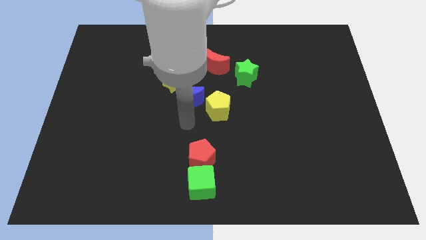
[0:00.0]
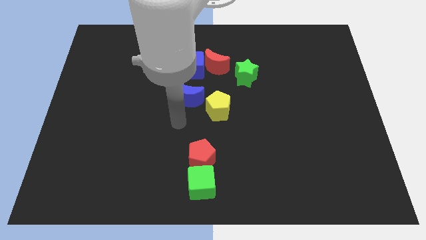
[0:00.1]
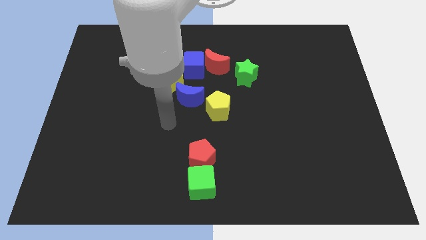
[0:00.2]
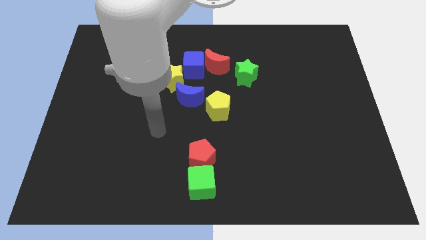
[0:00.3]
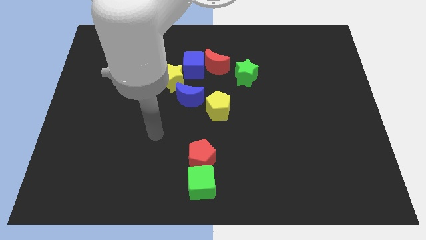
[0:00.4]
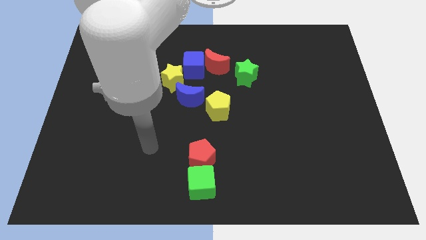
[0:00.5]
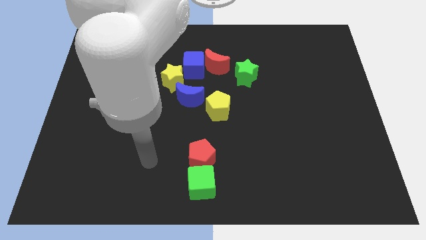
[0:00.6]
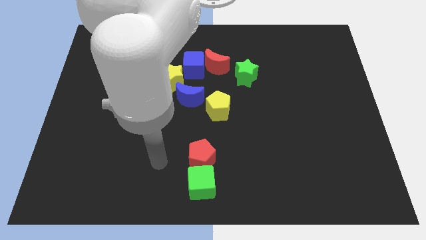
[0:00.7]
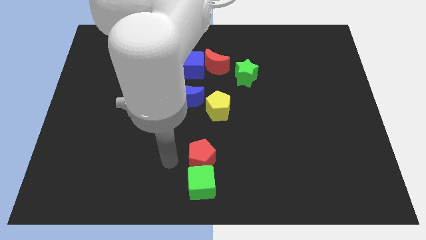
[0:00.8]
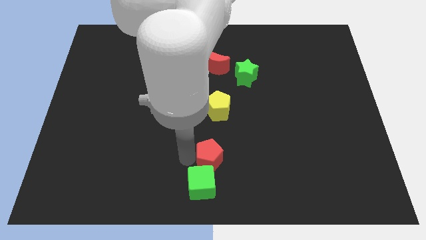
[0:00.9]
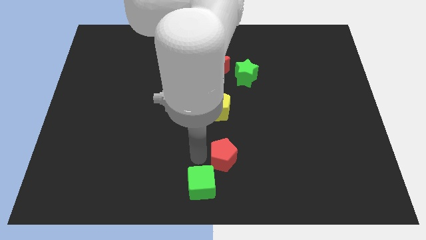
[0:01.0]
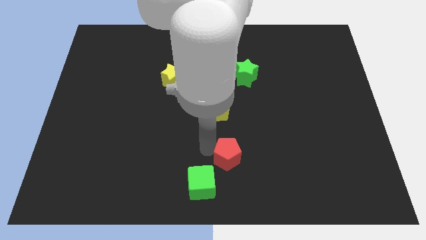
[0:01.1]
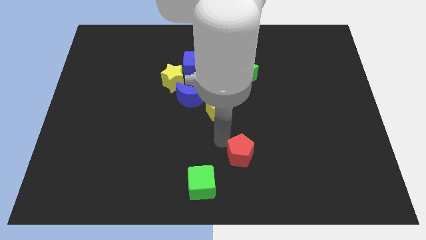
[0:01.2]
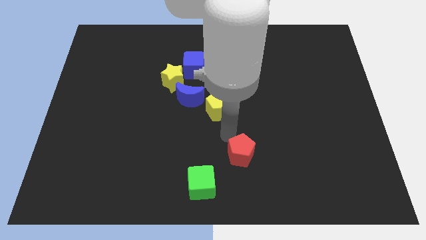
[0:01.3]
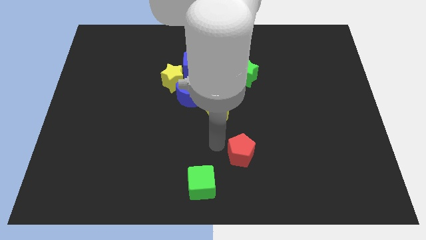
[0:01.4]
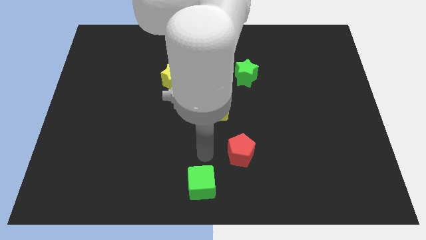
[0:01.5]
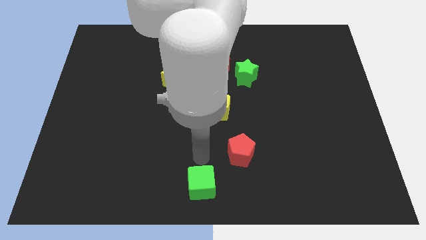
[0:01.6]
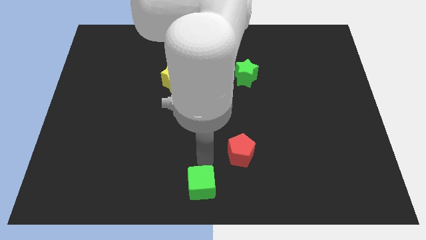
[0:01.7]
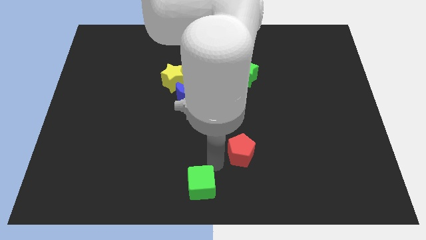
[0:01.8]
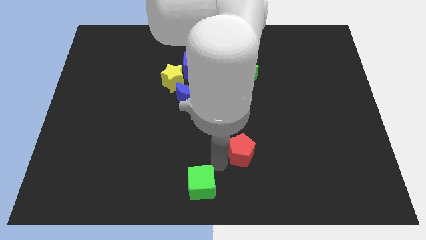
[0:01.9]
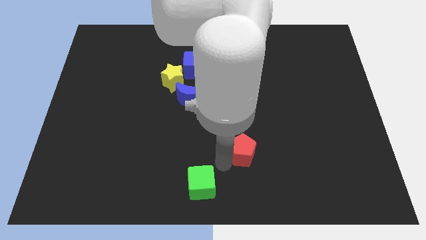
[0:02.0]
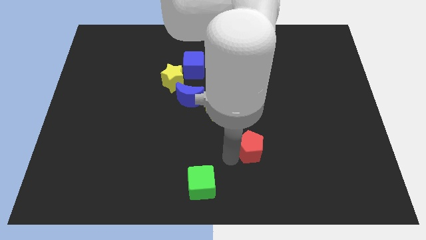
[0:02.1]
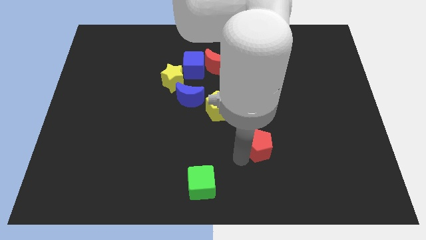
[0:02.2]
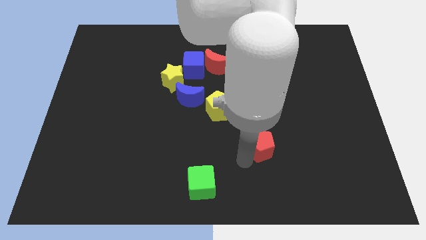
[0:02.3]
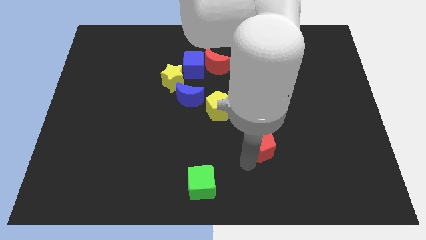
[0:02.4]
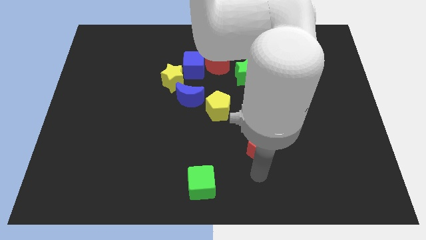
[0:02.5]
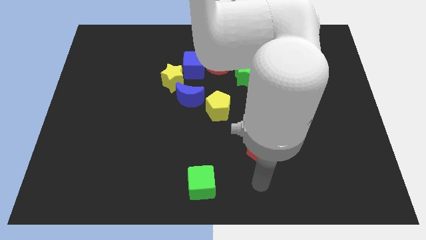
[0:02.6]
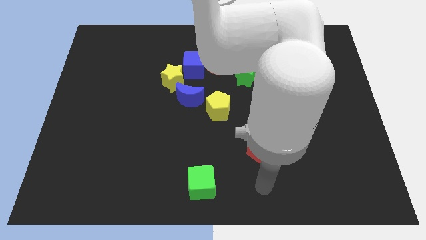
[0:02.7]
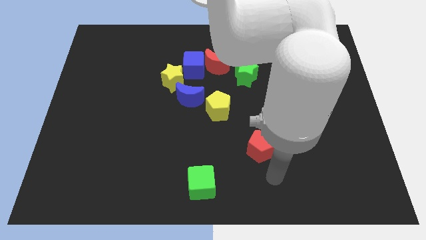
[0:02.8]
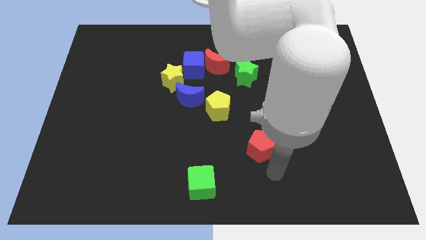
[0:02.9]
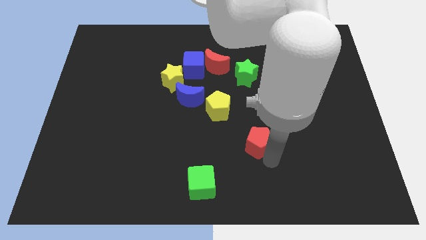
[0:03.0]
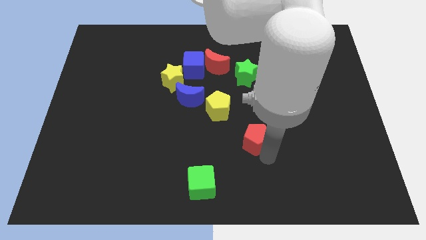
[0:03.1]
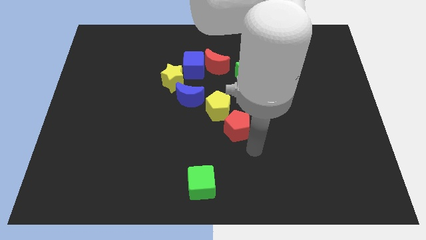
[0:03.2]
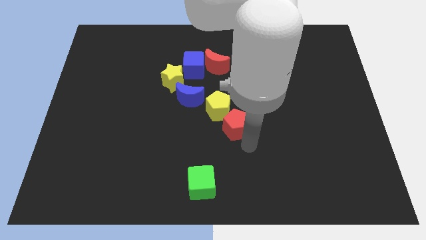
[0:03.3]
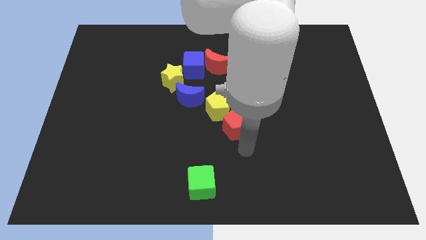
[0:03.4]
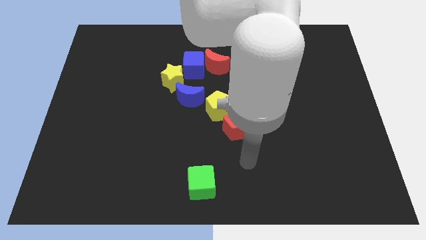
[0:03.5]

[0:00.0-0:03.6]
separate the red pentagon from the green cube

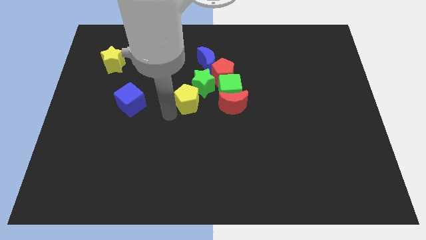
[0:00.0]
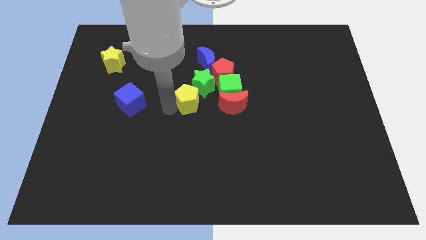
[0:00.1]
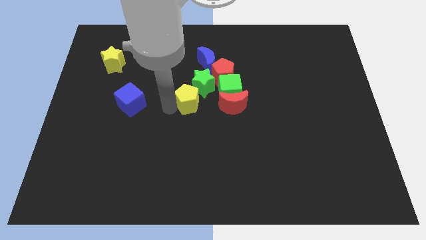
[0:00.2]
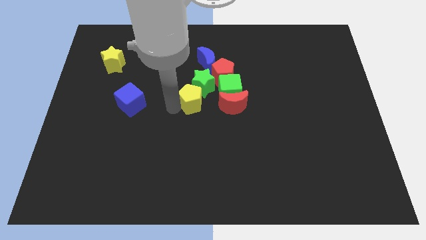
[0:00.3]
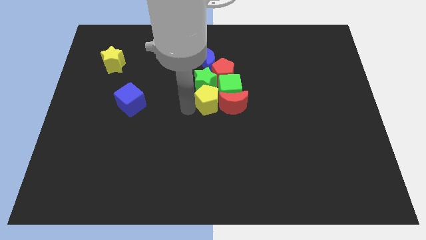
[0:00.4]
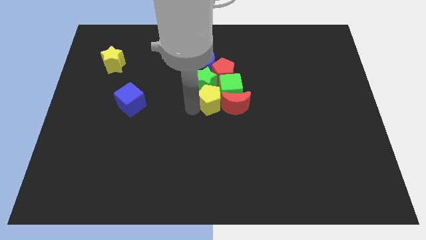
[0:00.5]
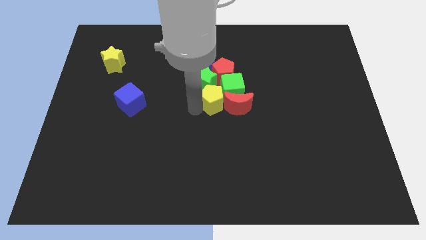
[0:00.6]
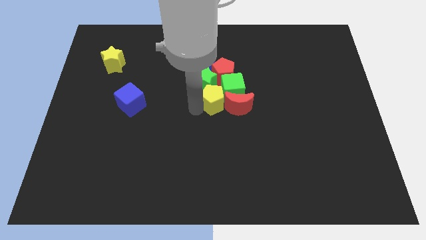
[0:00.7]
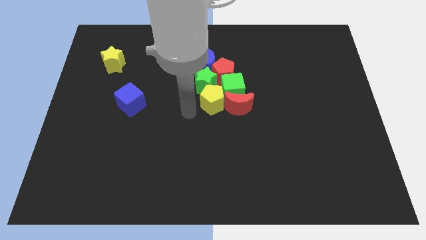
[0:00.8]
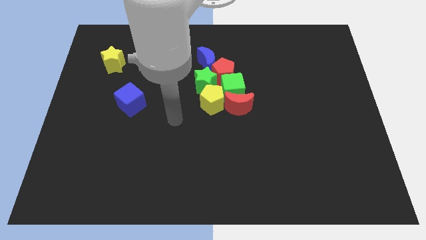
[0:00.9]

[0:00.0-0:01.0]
push the yellow pentagon into the green cube

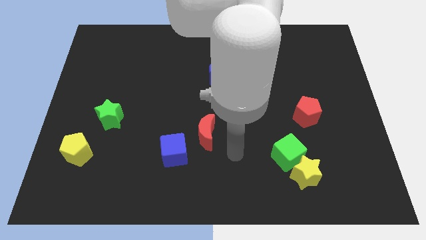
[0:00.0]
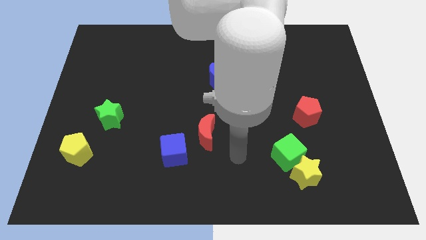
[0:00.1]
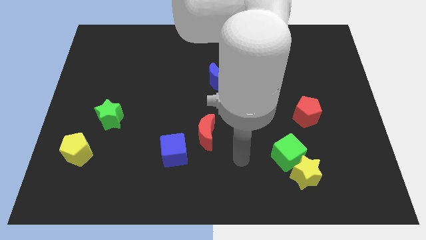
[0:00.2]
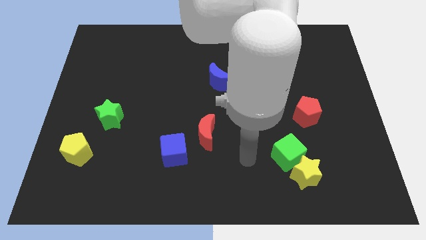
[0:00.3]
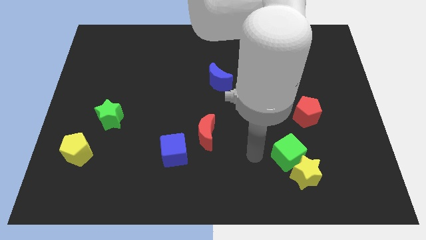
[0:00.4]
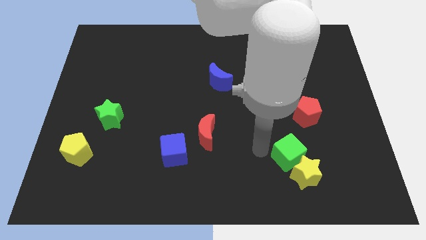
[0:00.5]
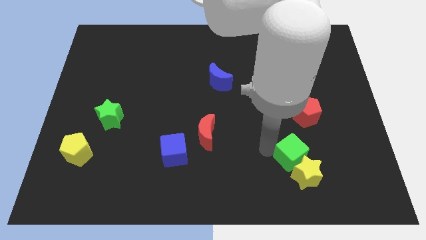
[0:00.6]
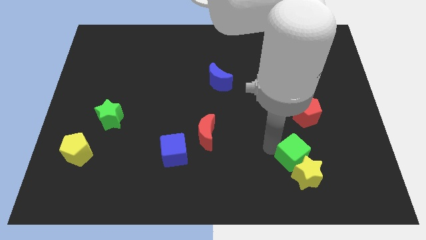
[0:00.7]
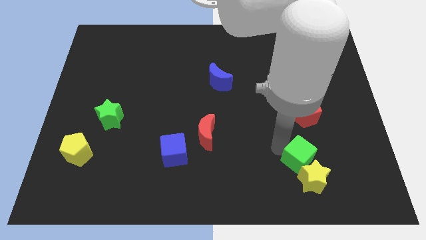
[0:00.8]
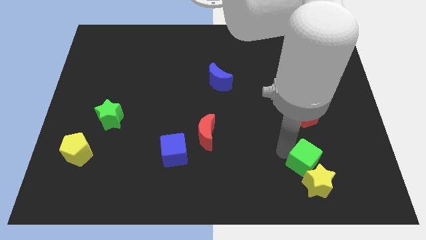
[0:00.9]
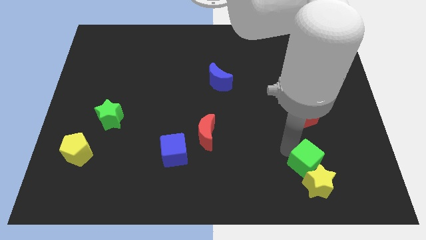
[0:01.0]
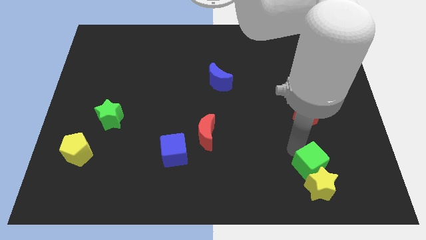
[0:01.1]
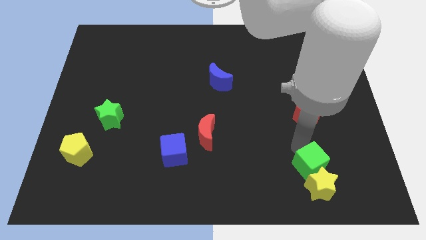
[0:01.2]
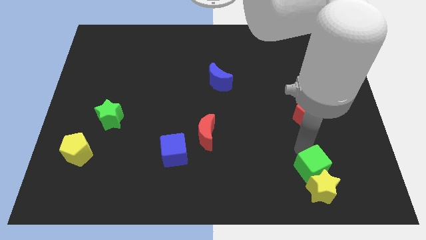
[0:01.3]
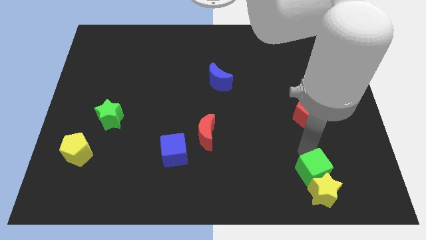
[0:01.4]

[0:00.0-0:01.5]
move the green cube to the bottom of the red pentagon

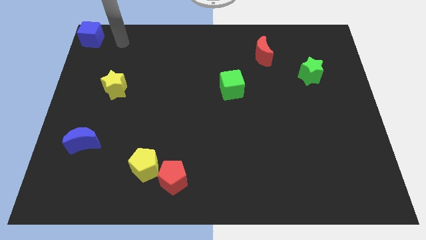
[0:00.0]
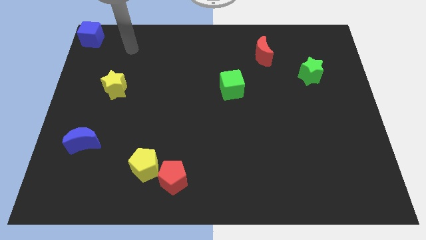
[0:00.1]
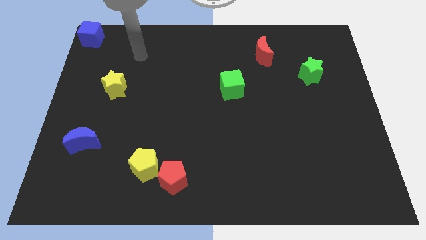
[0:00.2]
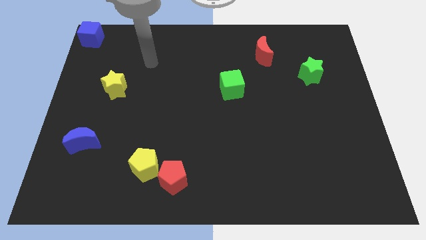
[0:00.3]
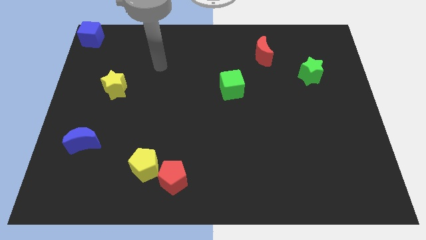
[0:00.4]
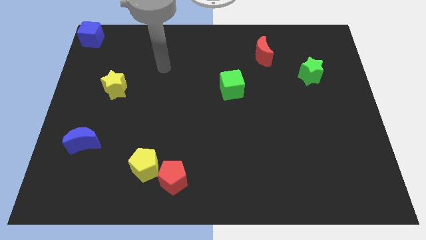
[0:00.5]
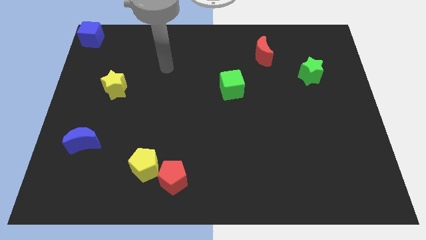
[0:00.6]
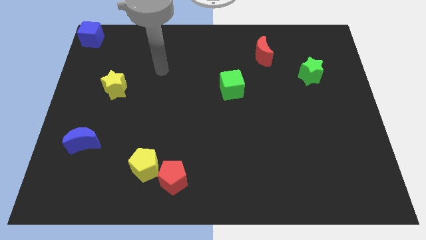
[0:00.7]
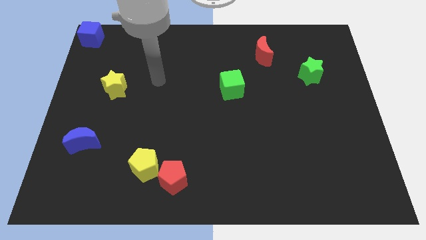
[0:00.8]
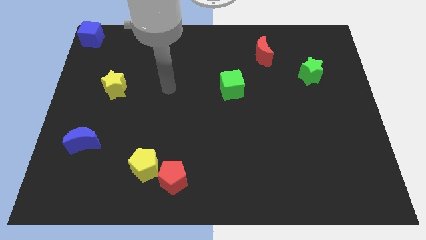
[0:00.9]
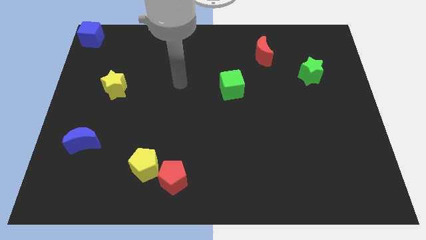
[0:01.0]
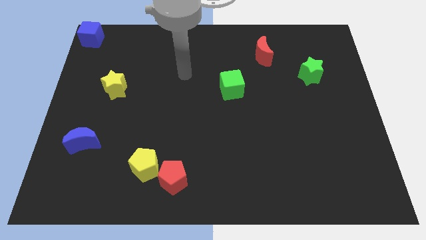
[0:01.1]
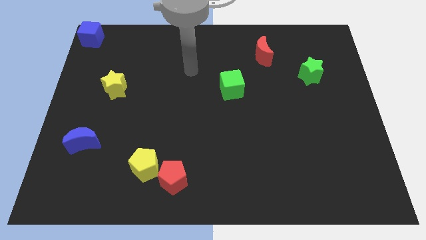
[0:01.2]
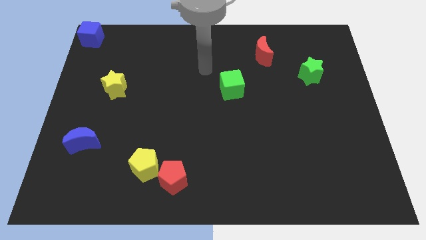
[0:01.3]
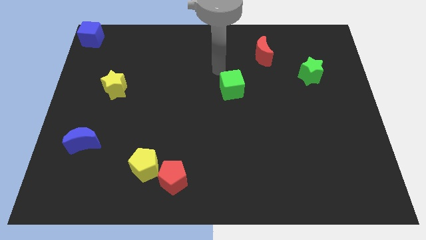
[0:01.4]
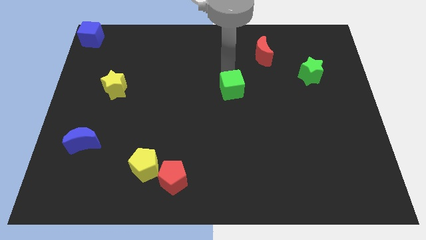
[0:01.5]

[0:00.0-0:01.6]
place your arm at the top of green cube

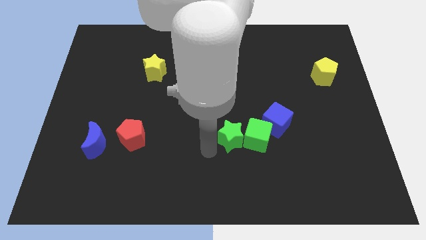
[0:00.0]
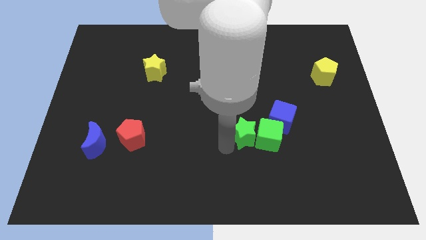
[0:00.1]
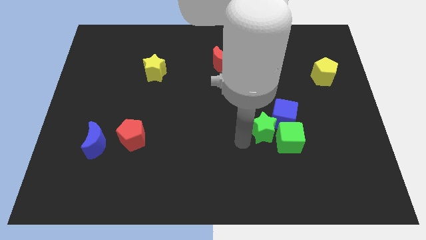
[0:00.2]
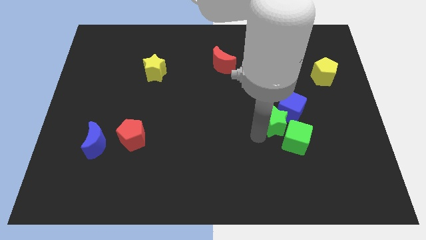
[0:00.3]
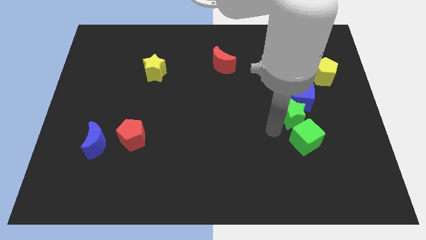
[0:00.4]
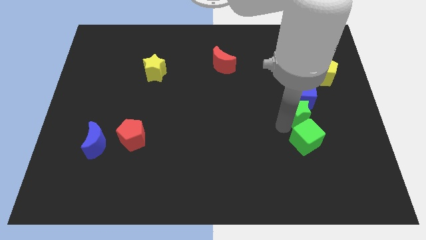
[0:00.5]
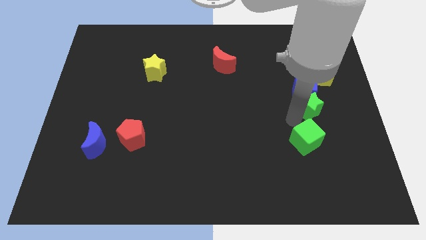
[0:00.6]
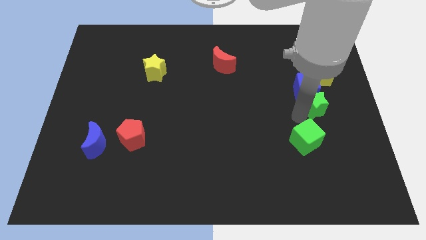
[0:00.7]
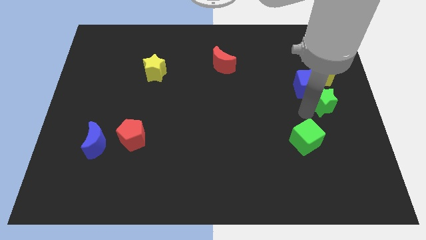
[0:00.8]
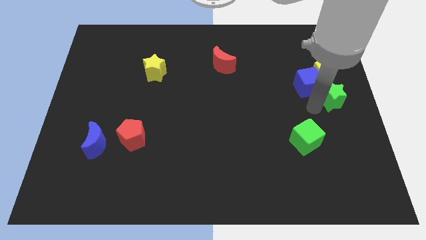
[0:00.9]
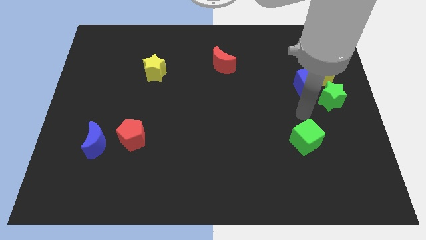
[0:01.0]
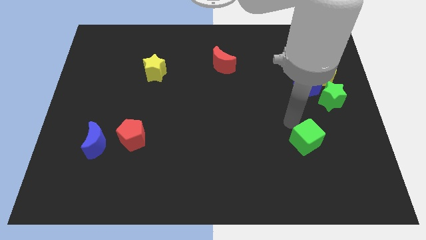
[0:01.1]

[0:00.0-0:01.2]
bring the green star and the blue cube towards the right side
